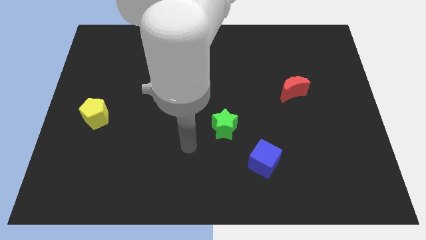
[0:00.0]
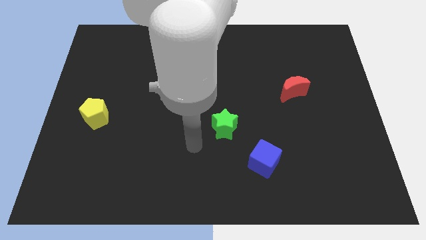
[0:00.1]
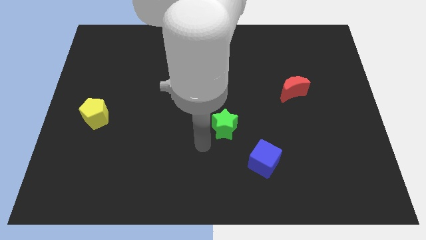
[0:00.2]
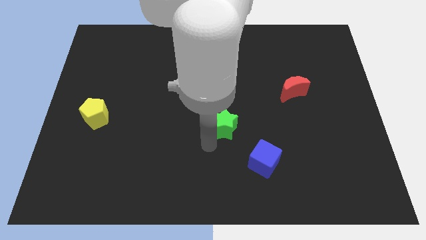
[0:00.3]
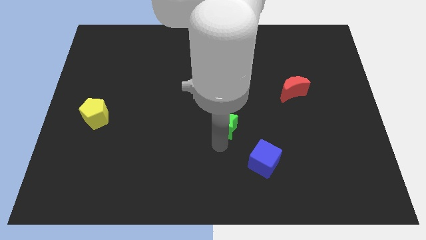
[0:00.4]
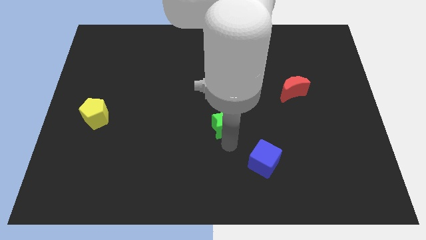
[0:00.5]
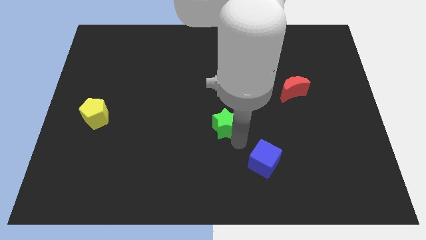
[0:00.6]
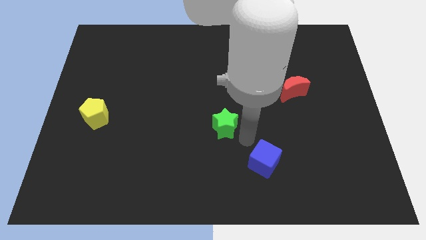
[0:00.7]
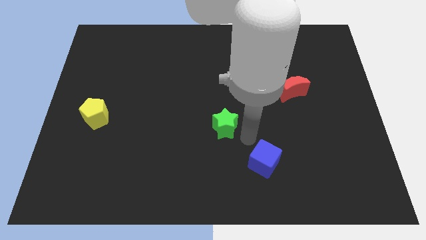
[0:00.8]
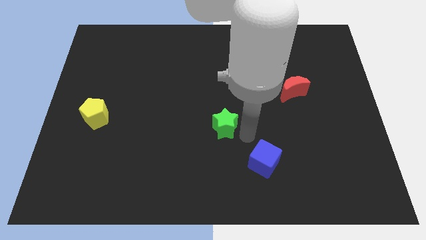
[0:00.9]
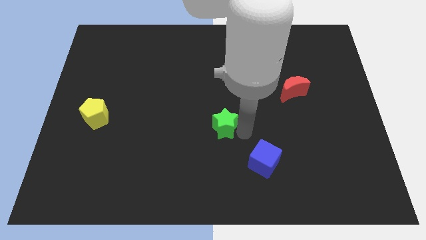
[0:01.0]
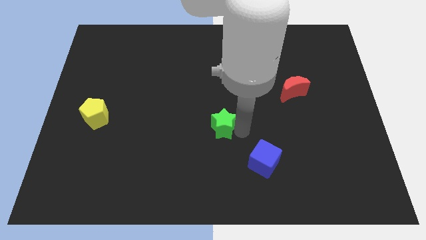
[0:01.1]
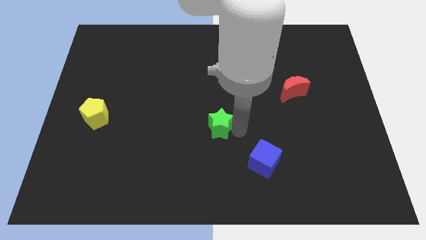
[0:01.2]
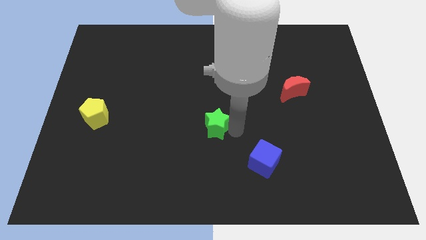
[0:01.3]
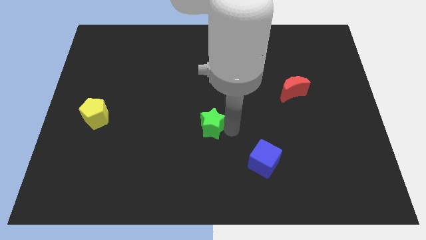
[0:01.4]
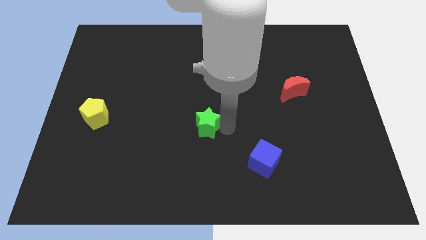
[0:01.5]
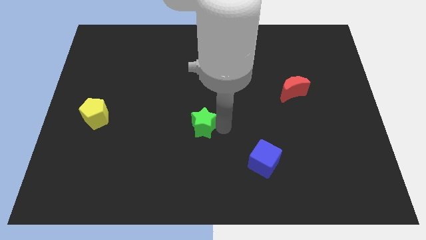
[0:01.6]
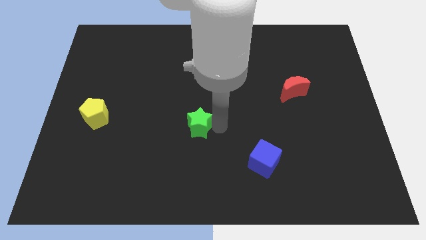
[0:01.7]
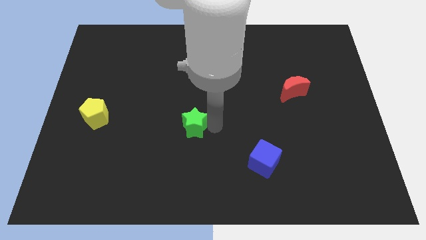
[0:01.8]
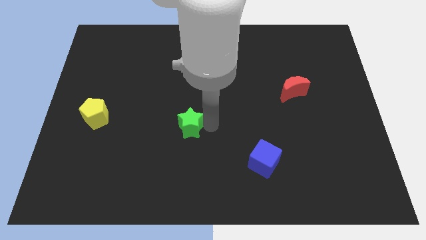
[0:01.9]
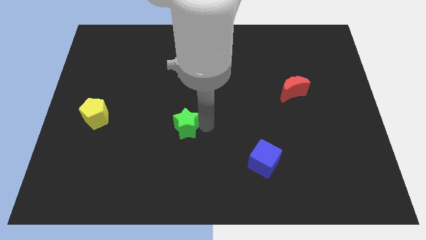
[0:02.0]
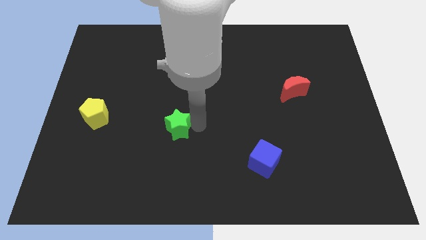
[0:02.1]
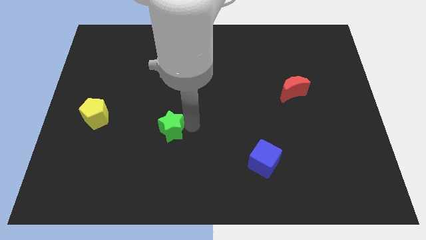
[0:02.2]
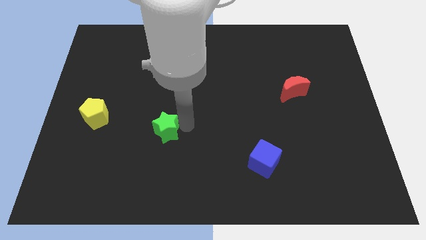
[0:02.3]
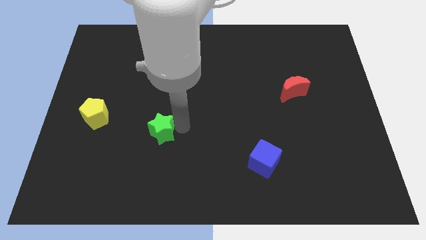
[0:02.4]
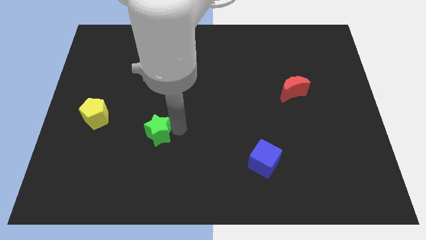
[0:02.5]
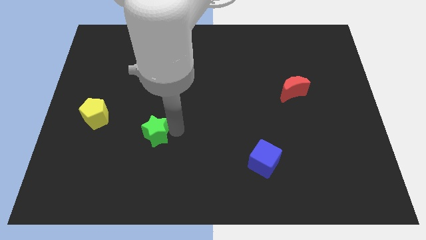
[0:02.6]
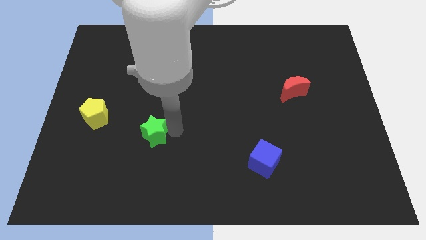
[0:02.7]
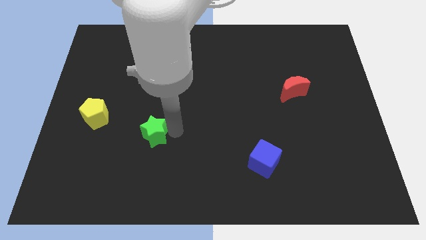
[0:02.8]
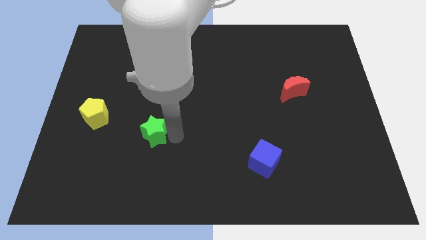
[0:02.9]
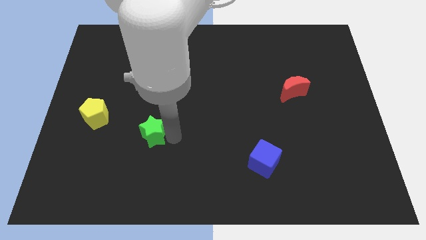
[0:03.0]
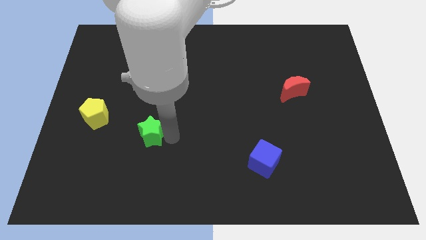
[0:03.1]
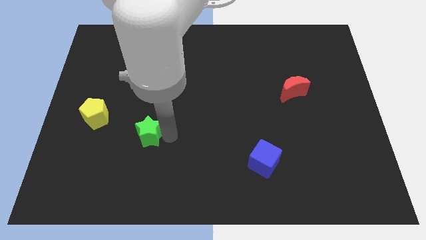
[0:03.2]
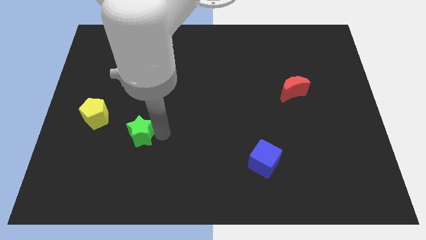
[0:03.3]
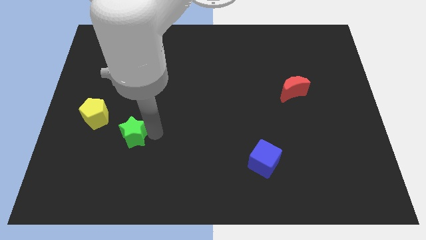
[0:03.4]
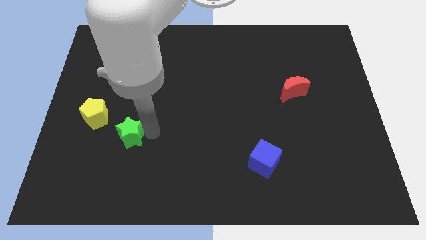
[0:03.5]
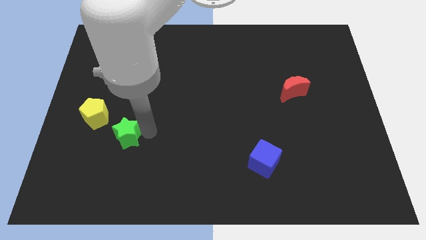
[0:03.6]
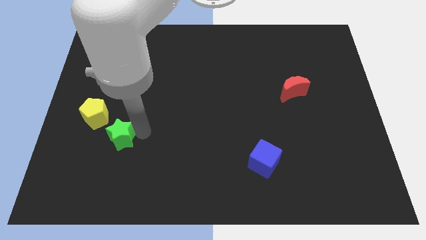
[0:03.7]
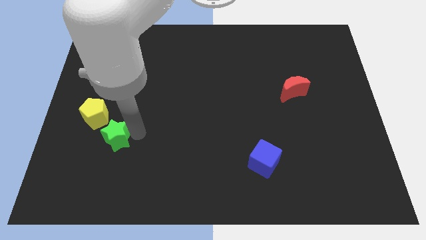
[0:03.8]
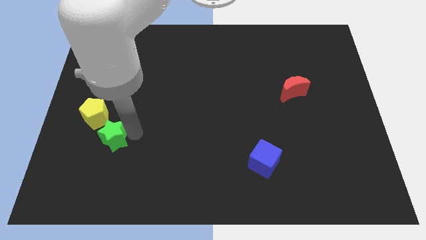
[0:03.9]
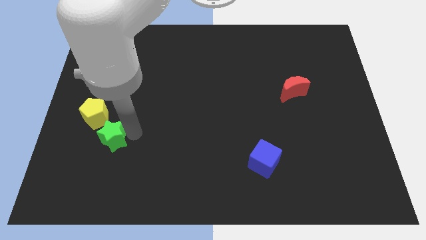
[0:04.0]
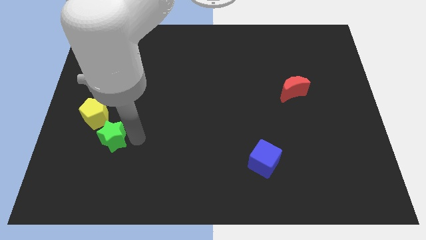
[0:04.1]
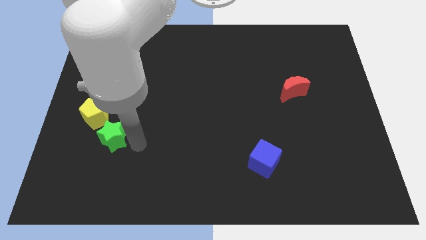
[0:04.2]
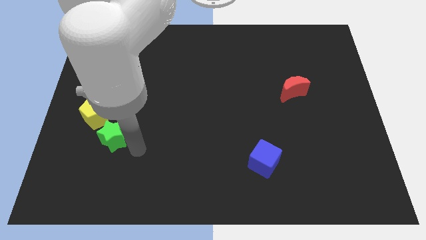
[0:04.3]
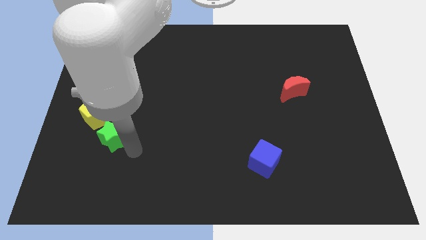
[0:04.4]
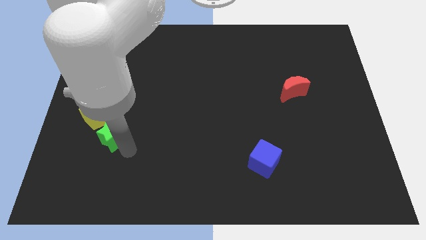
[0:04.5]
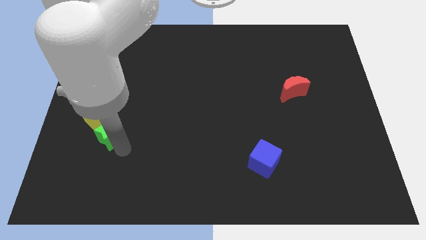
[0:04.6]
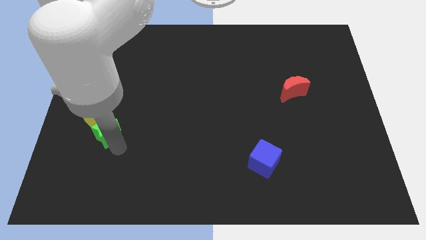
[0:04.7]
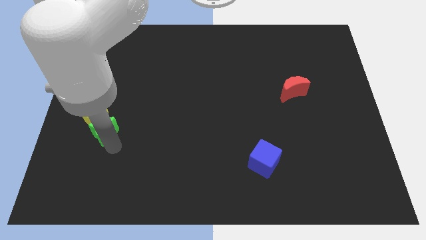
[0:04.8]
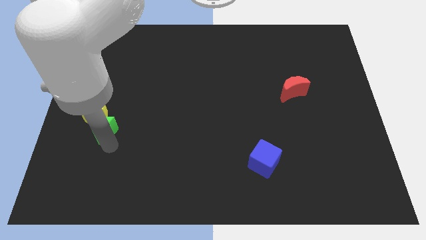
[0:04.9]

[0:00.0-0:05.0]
put the green block close to the yellow pentagon

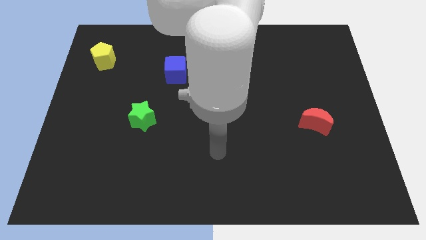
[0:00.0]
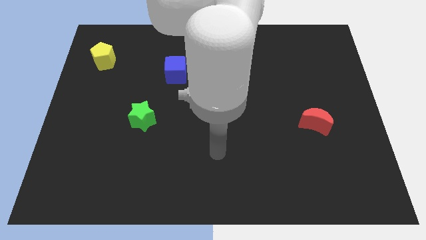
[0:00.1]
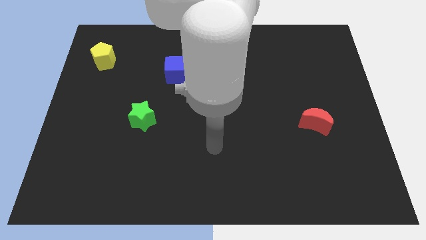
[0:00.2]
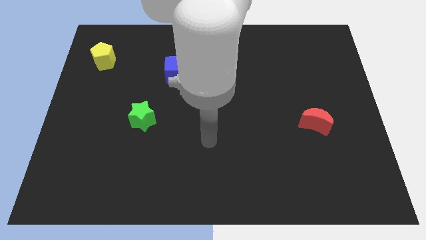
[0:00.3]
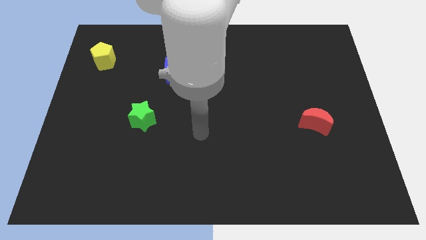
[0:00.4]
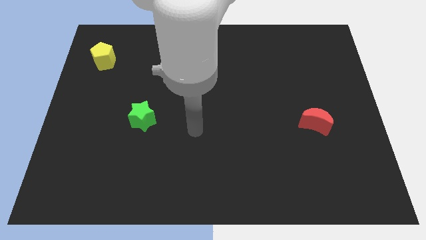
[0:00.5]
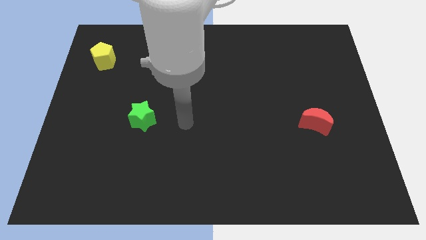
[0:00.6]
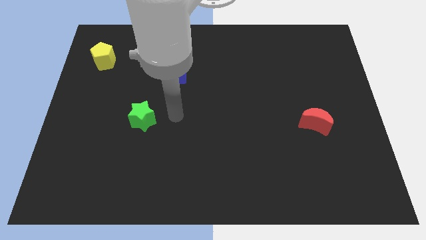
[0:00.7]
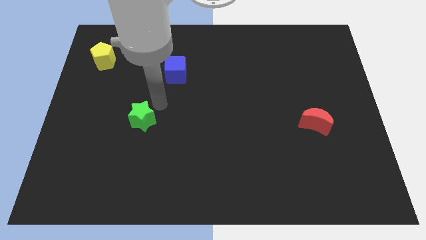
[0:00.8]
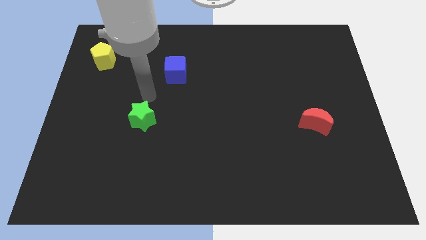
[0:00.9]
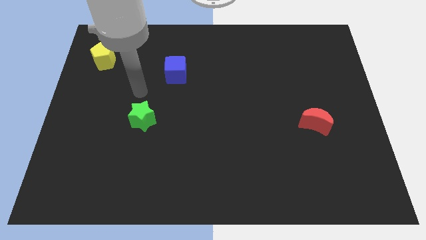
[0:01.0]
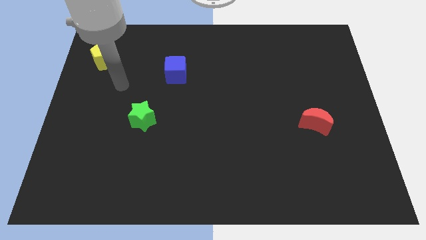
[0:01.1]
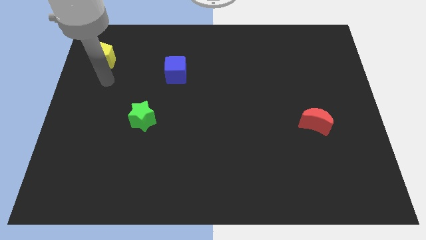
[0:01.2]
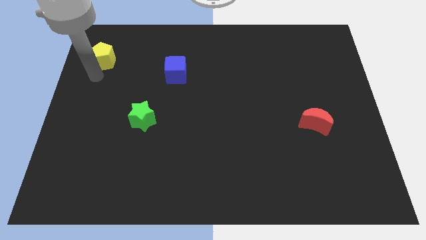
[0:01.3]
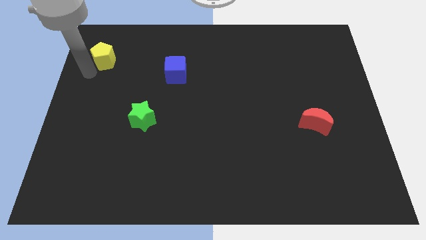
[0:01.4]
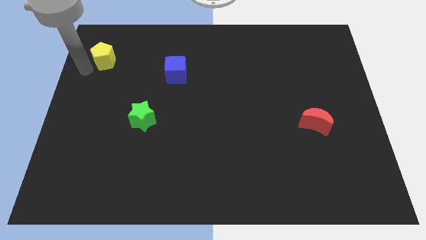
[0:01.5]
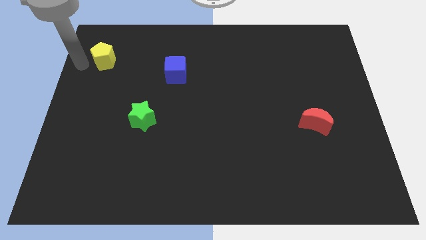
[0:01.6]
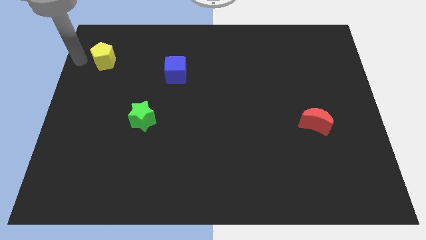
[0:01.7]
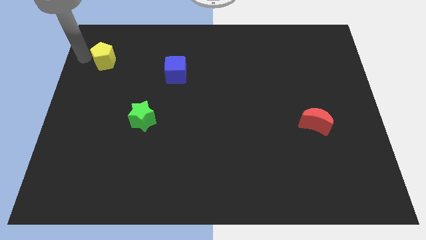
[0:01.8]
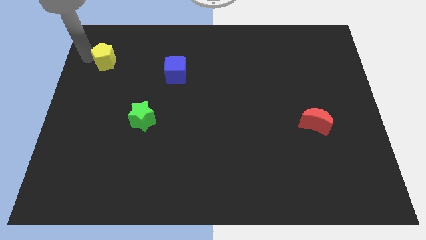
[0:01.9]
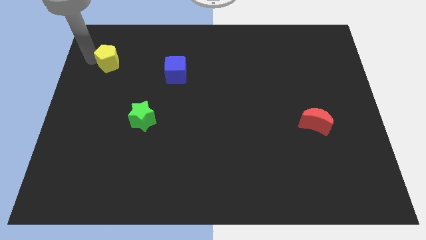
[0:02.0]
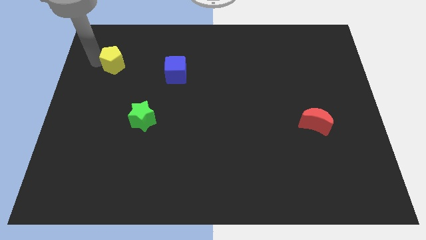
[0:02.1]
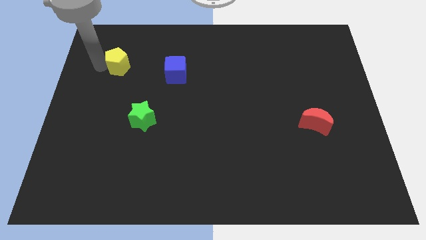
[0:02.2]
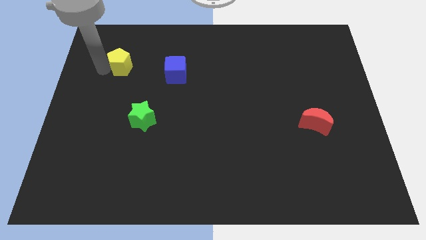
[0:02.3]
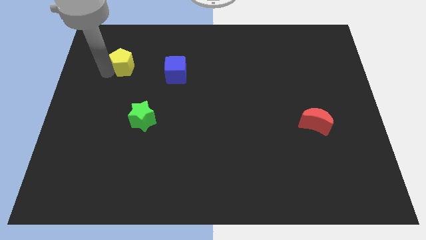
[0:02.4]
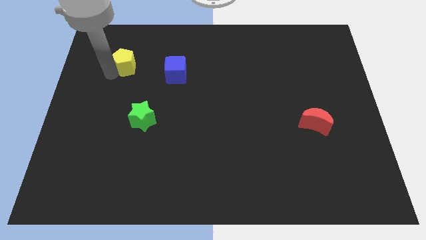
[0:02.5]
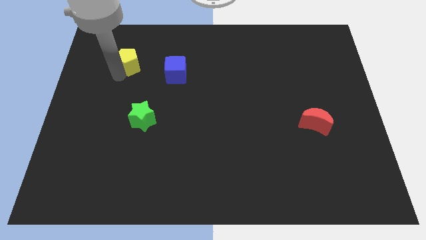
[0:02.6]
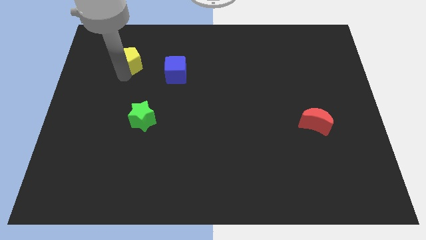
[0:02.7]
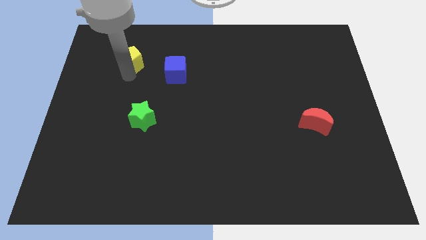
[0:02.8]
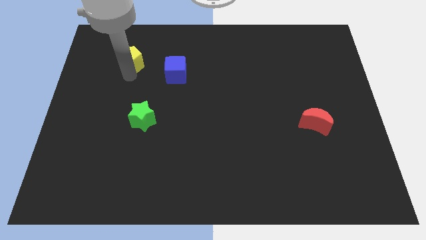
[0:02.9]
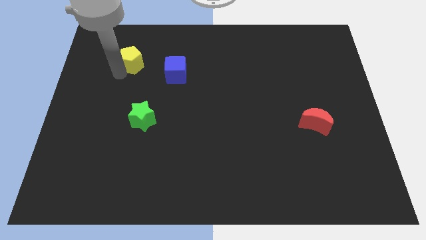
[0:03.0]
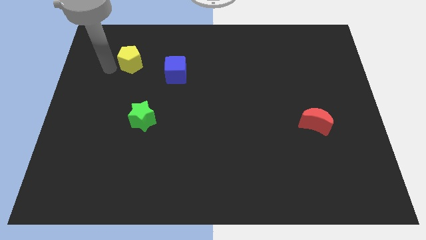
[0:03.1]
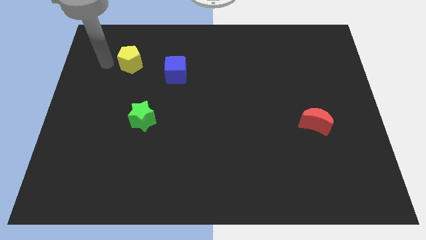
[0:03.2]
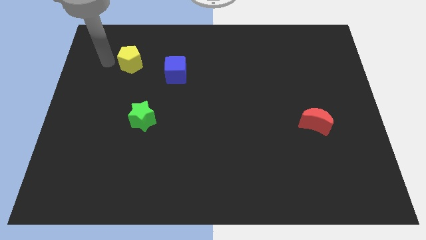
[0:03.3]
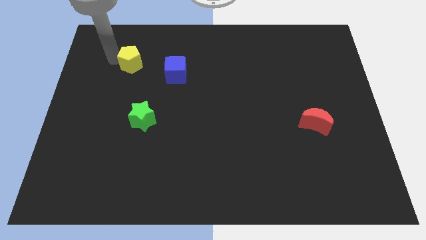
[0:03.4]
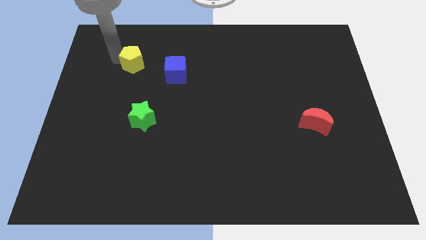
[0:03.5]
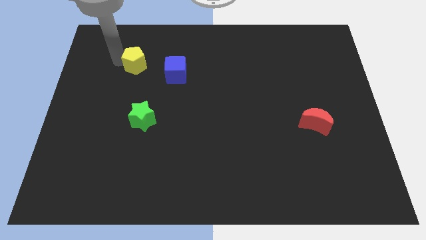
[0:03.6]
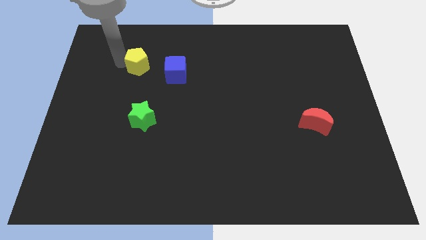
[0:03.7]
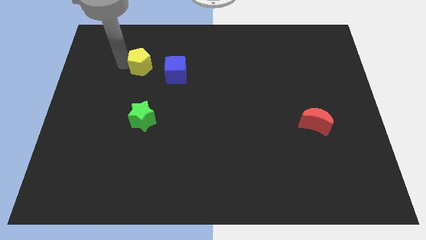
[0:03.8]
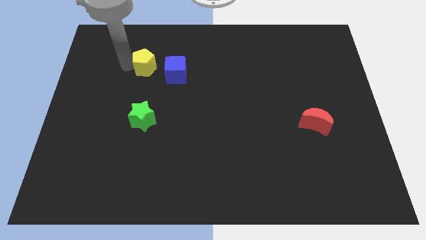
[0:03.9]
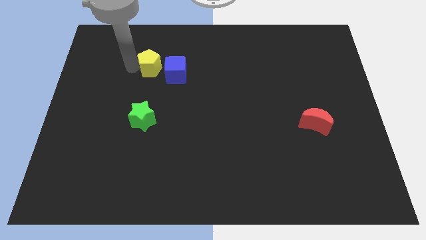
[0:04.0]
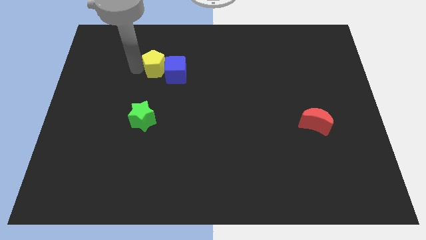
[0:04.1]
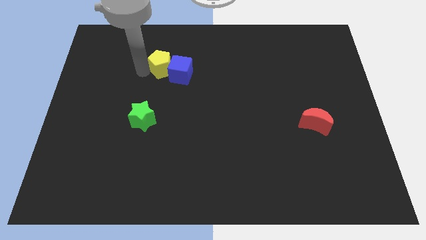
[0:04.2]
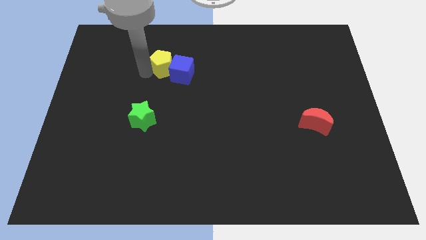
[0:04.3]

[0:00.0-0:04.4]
move the yellow pentagon next to the blue block
